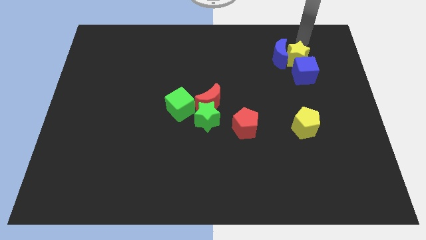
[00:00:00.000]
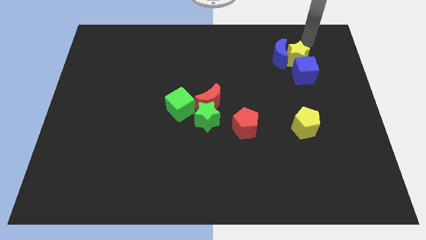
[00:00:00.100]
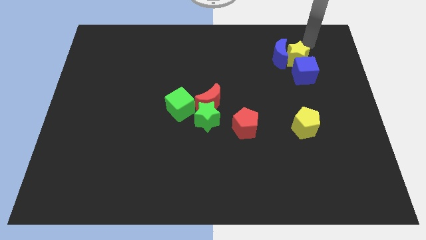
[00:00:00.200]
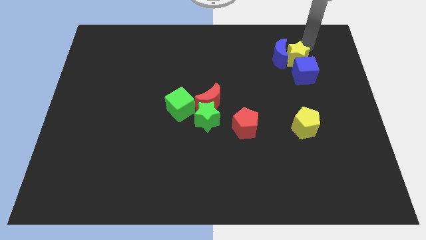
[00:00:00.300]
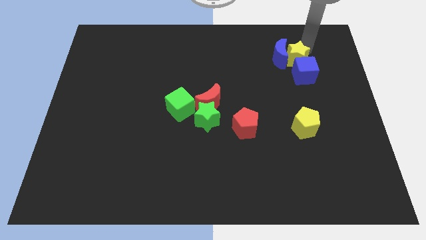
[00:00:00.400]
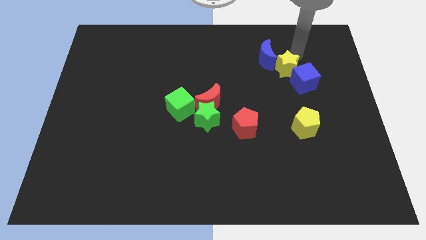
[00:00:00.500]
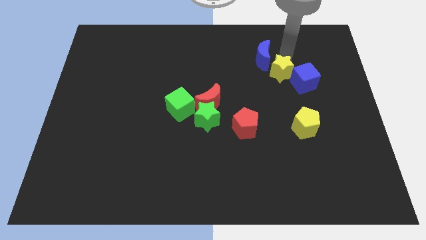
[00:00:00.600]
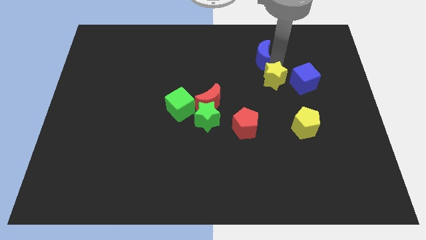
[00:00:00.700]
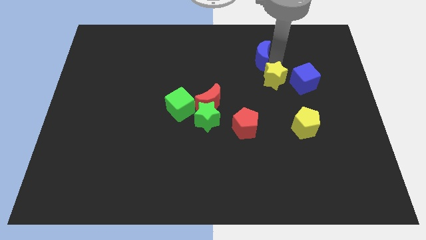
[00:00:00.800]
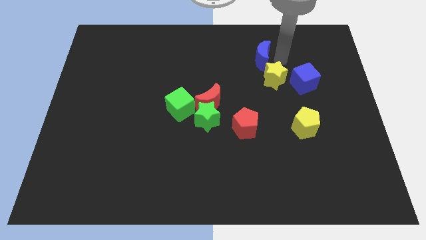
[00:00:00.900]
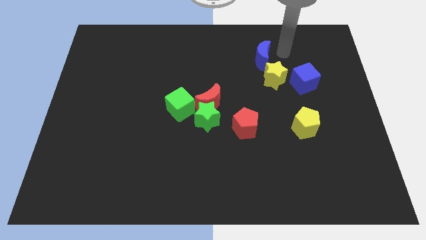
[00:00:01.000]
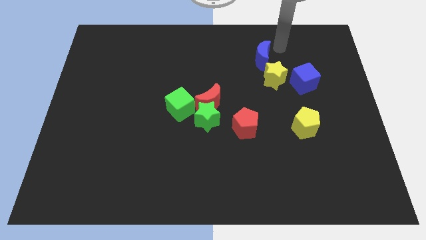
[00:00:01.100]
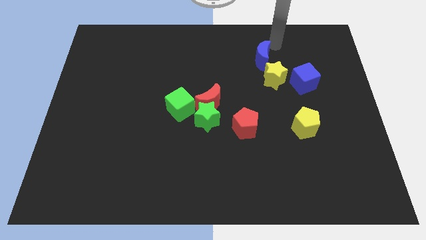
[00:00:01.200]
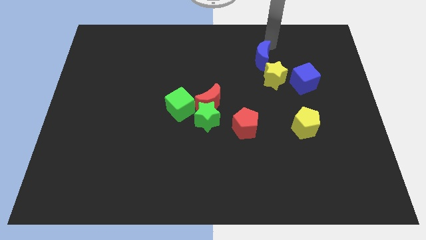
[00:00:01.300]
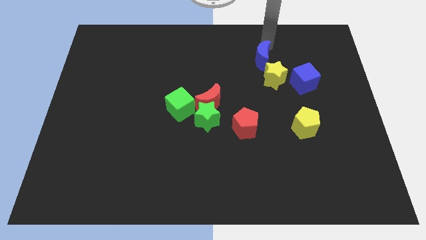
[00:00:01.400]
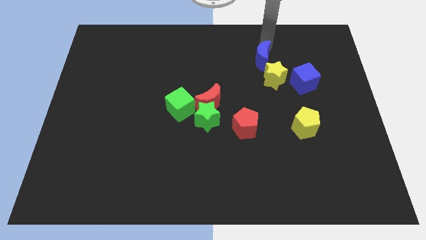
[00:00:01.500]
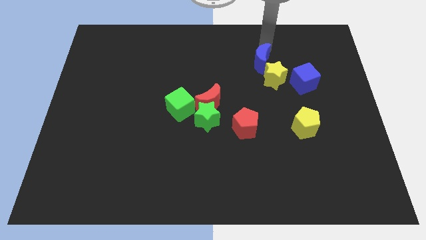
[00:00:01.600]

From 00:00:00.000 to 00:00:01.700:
push the yellow star downwards to the left side

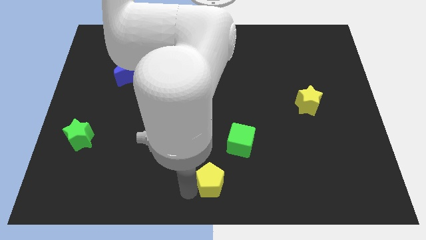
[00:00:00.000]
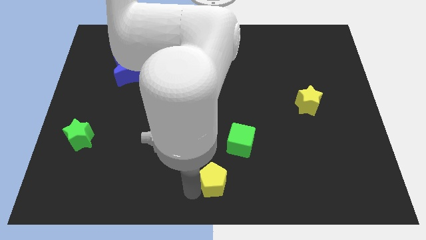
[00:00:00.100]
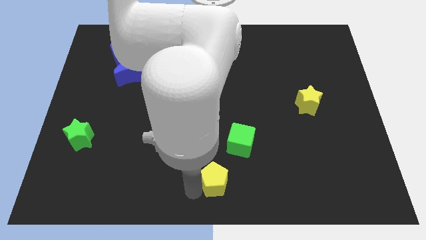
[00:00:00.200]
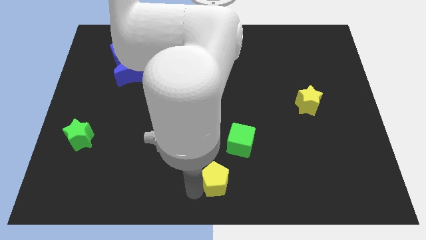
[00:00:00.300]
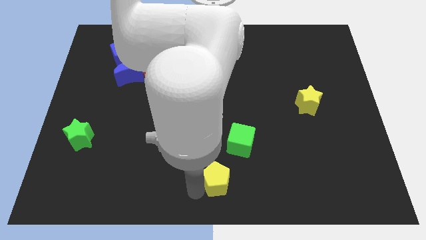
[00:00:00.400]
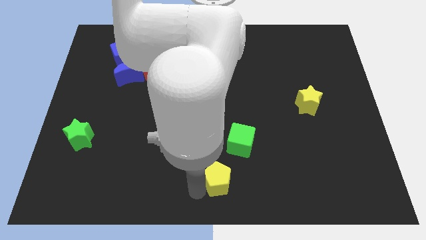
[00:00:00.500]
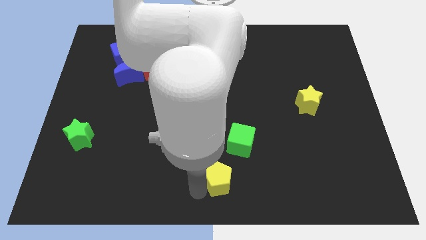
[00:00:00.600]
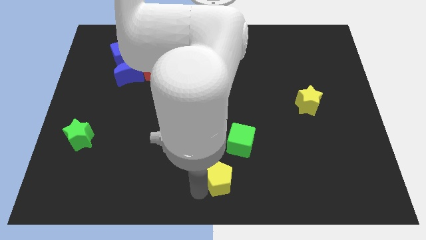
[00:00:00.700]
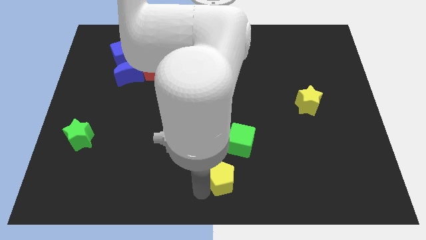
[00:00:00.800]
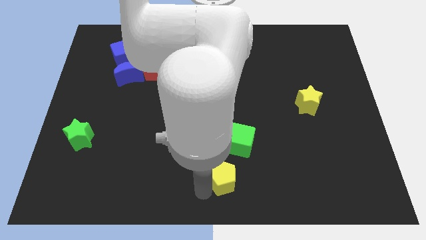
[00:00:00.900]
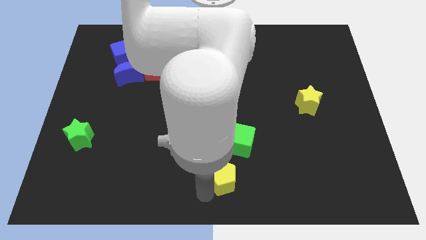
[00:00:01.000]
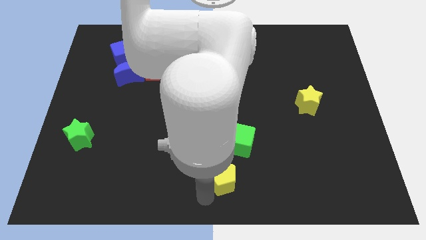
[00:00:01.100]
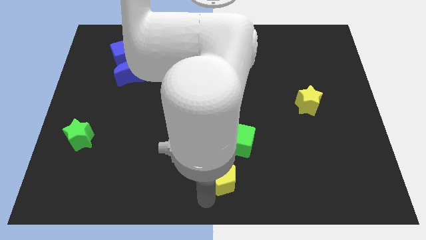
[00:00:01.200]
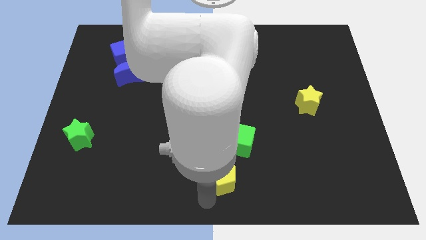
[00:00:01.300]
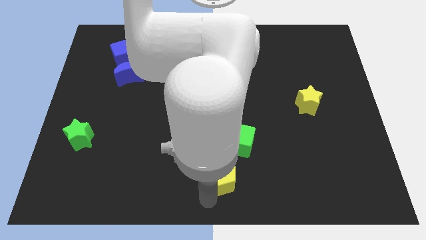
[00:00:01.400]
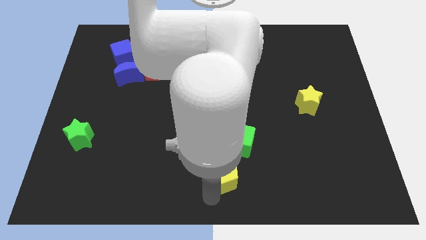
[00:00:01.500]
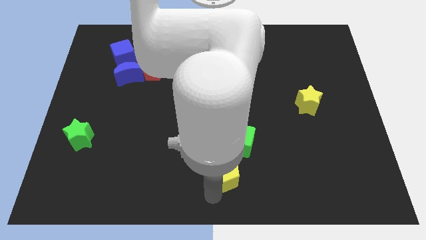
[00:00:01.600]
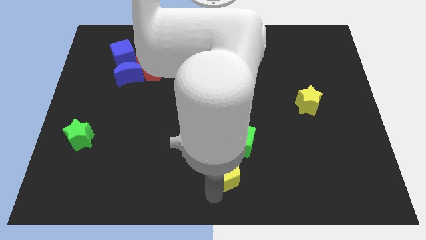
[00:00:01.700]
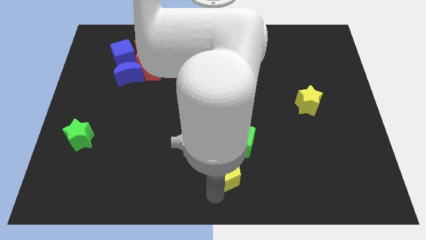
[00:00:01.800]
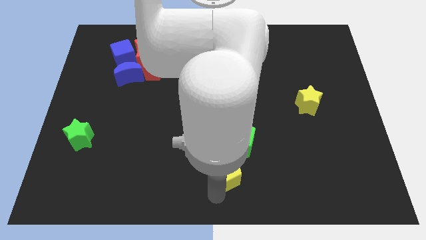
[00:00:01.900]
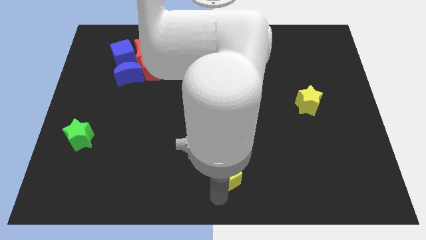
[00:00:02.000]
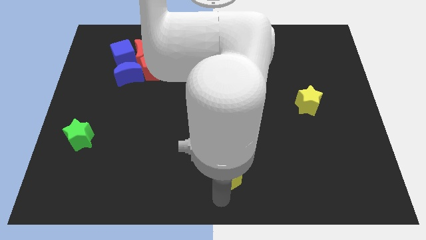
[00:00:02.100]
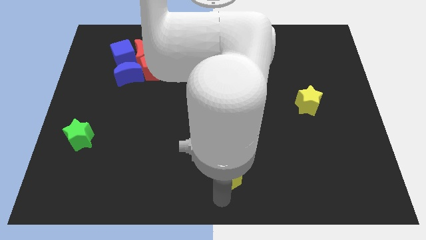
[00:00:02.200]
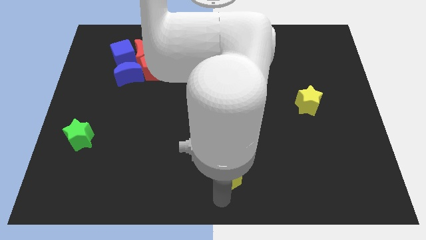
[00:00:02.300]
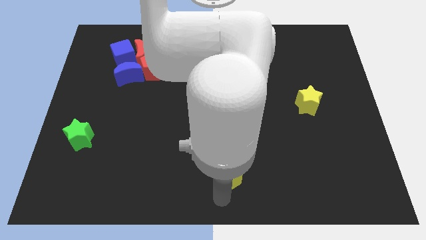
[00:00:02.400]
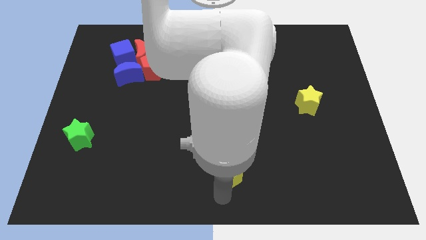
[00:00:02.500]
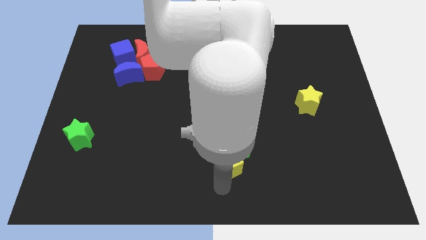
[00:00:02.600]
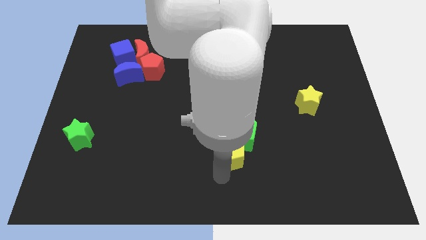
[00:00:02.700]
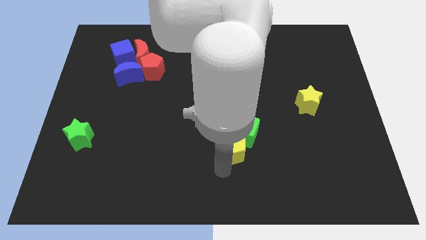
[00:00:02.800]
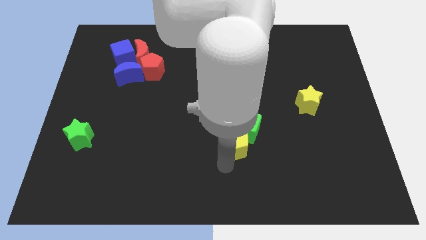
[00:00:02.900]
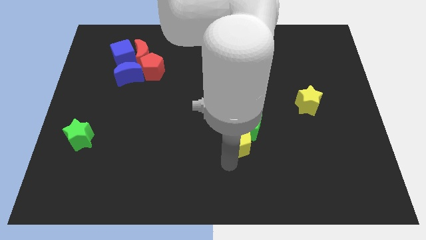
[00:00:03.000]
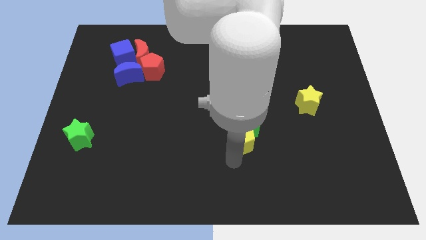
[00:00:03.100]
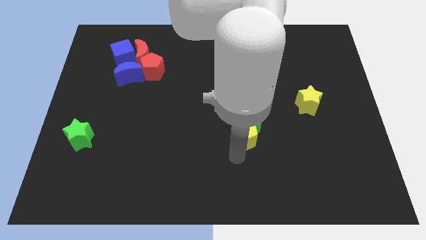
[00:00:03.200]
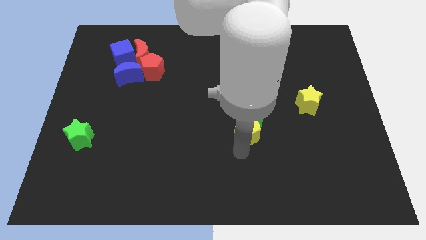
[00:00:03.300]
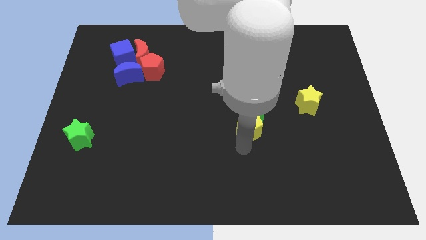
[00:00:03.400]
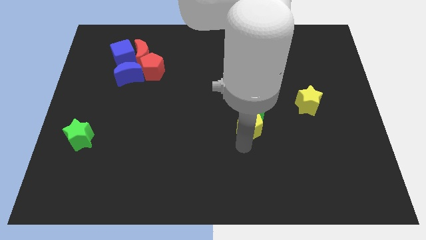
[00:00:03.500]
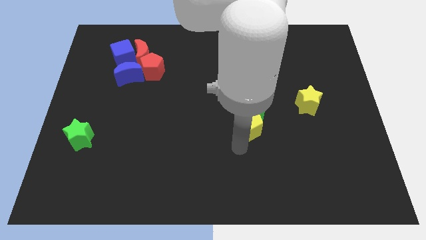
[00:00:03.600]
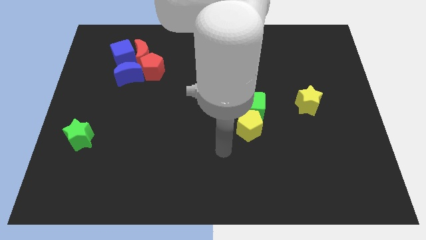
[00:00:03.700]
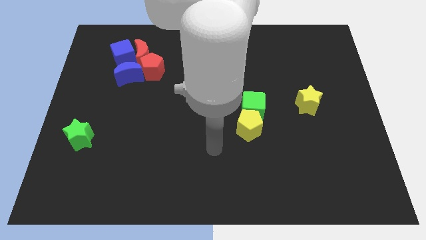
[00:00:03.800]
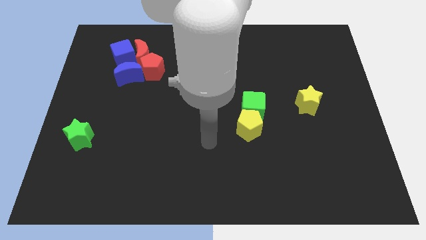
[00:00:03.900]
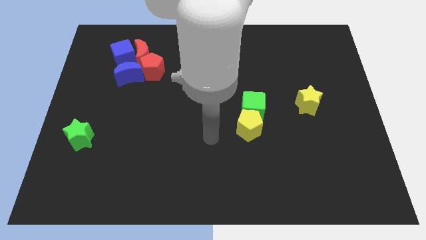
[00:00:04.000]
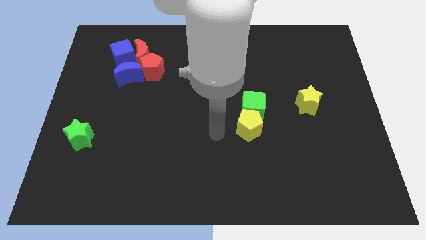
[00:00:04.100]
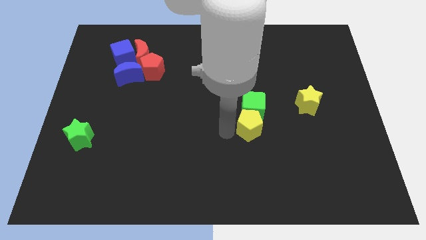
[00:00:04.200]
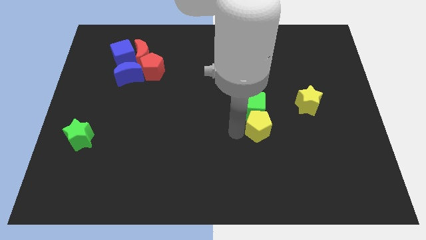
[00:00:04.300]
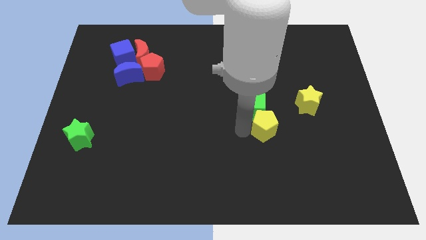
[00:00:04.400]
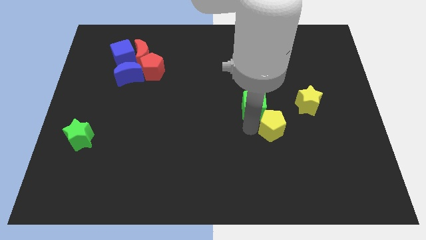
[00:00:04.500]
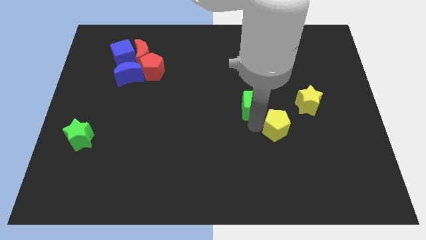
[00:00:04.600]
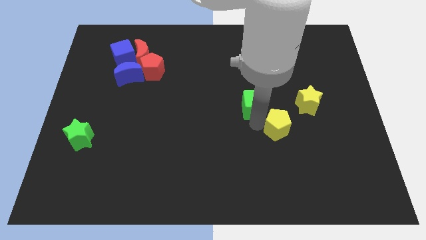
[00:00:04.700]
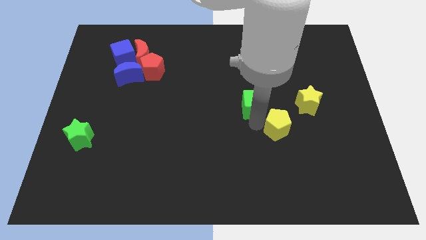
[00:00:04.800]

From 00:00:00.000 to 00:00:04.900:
push the yellow pentagon right below the green cube

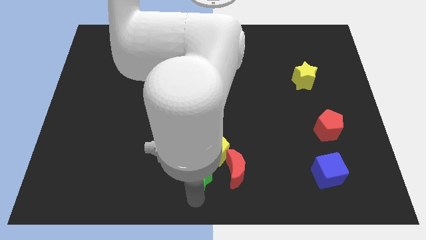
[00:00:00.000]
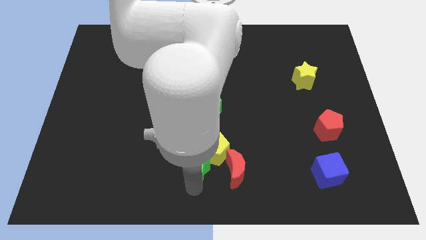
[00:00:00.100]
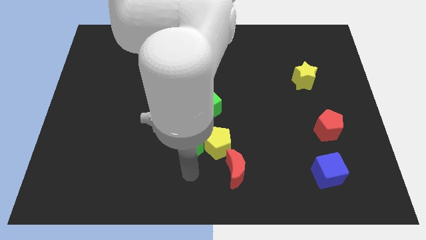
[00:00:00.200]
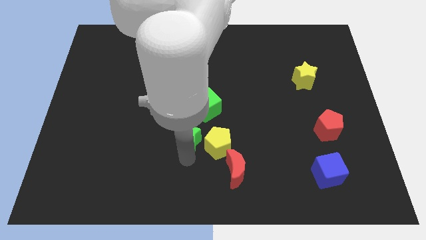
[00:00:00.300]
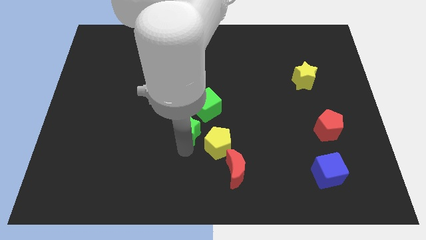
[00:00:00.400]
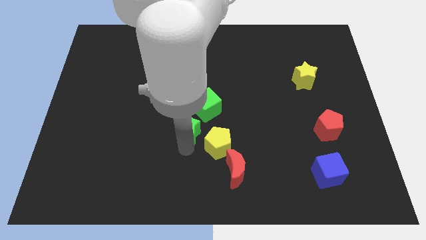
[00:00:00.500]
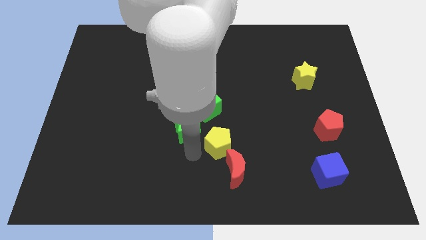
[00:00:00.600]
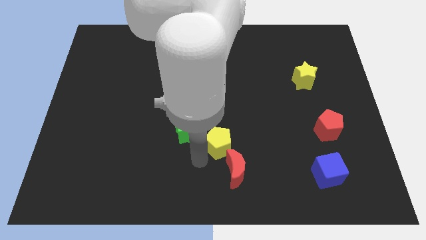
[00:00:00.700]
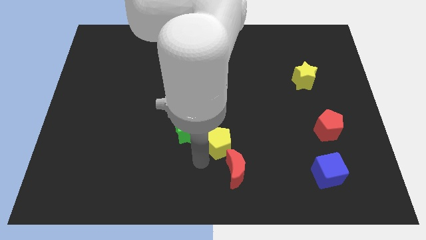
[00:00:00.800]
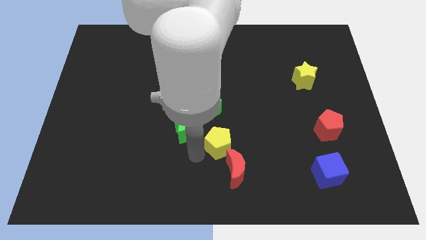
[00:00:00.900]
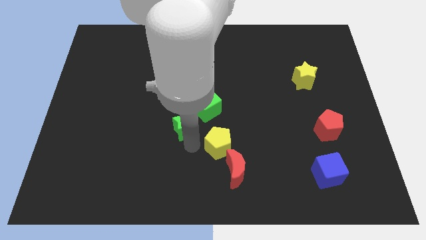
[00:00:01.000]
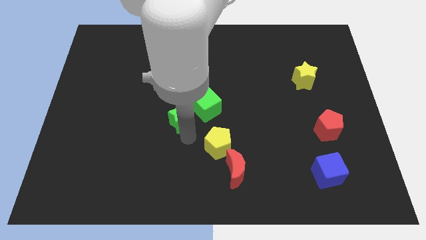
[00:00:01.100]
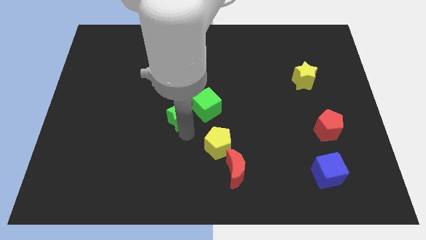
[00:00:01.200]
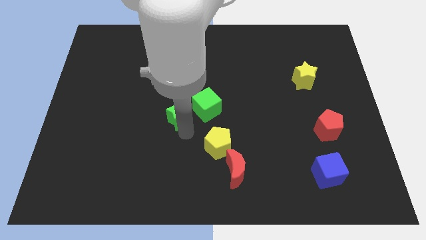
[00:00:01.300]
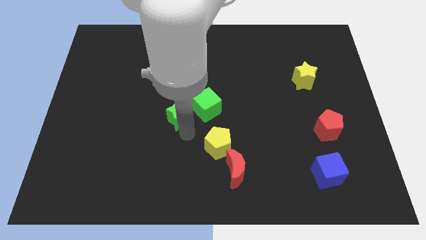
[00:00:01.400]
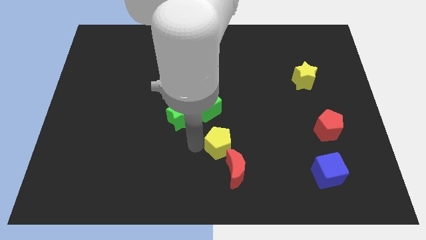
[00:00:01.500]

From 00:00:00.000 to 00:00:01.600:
push the green star slightly upwards

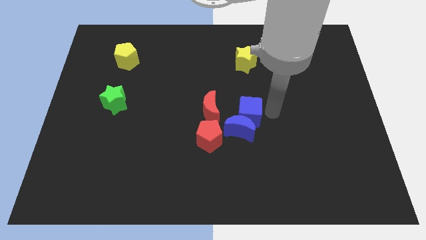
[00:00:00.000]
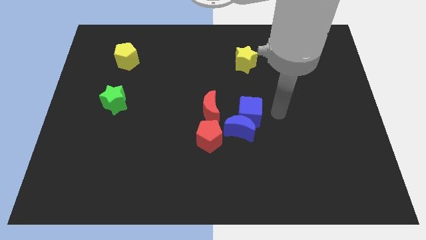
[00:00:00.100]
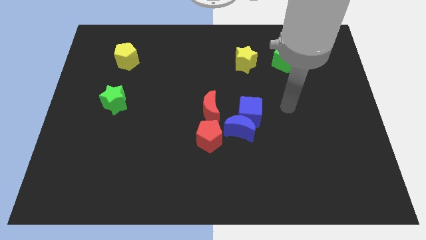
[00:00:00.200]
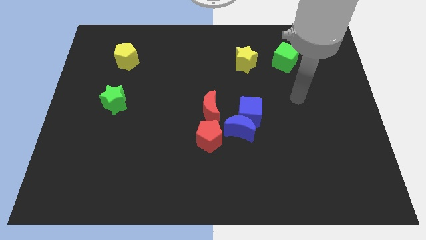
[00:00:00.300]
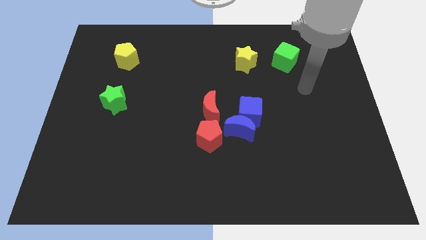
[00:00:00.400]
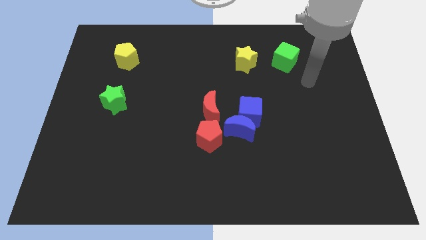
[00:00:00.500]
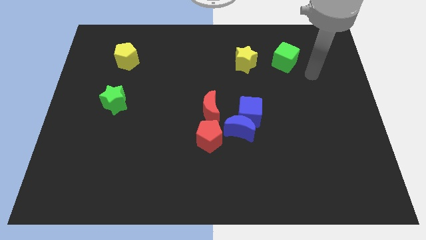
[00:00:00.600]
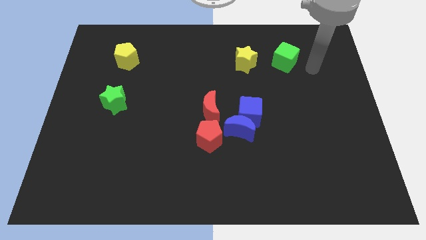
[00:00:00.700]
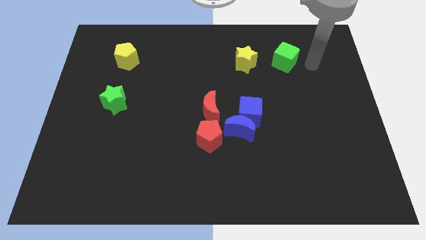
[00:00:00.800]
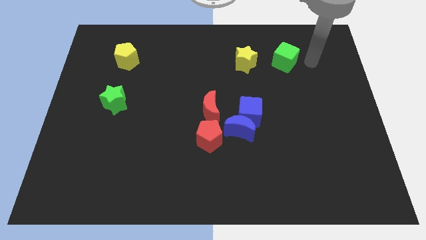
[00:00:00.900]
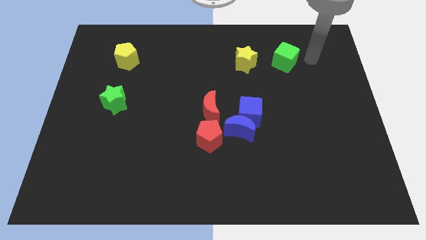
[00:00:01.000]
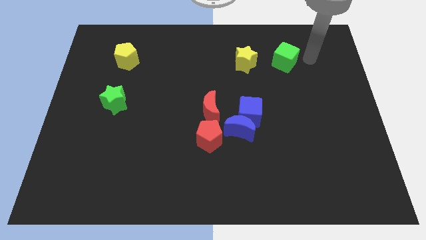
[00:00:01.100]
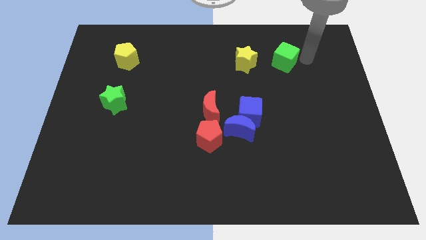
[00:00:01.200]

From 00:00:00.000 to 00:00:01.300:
move the arm close to green cube
